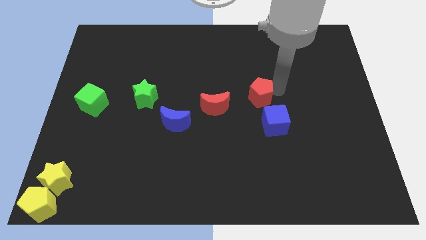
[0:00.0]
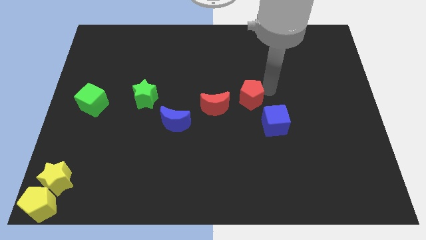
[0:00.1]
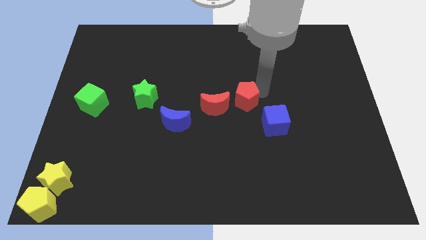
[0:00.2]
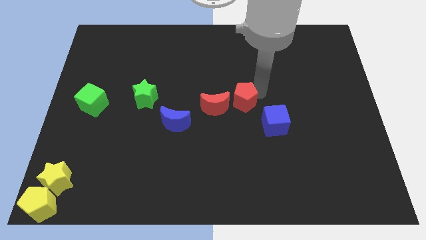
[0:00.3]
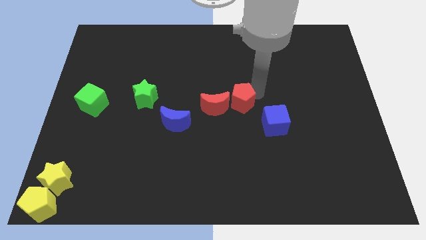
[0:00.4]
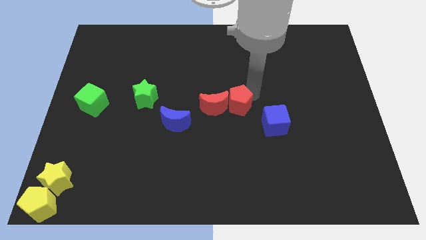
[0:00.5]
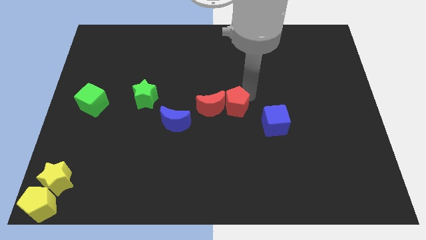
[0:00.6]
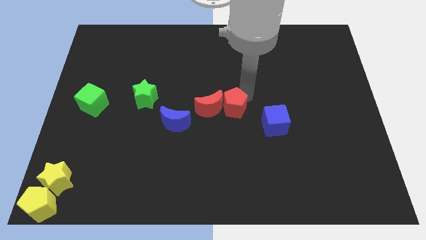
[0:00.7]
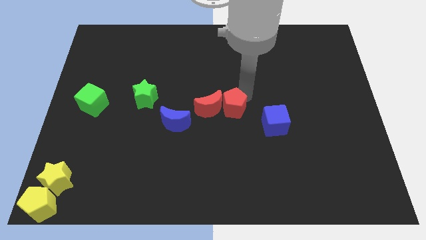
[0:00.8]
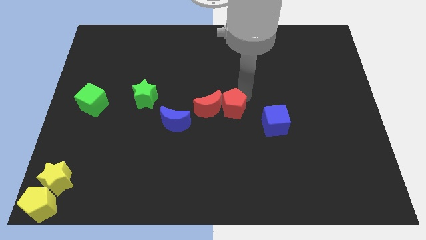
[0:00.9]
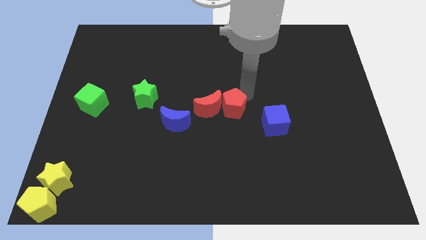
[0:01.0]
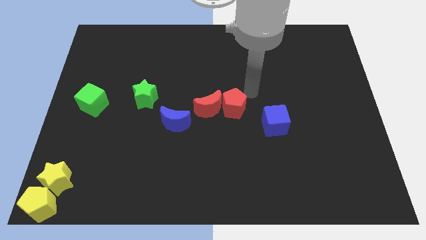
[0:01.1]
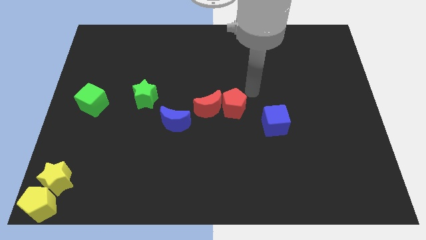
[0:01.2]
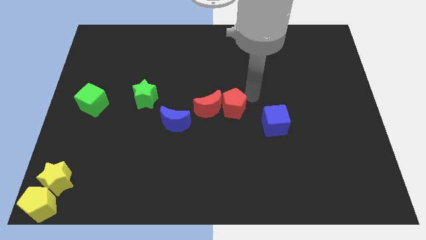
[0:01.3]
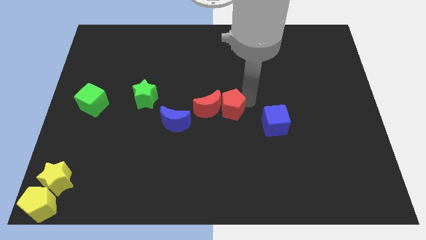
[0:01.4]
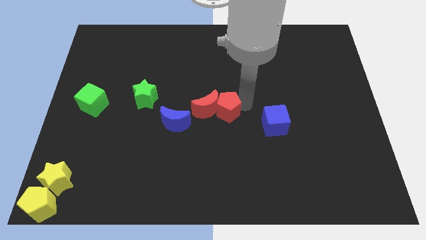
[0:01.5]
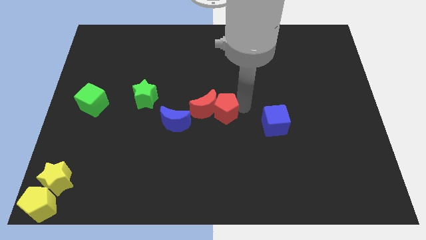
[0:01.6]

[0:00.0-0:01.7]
push the red pentagon into the red moon

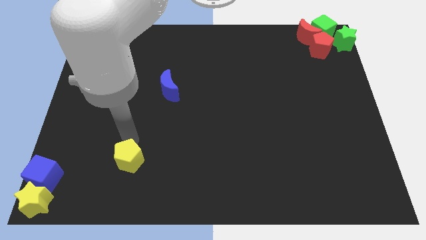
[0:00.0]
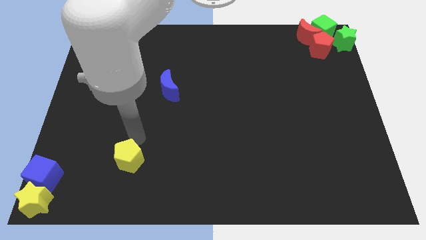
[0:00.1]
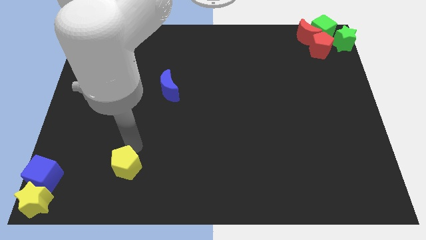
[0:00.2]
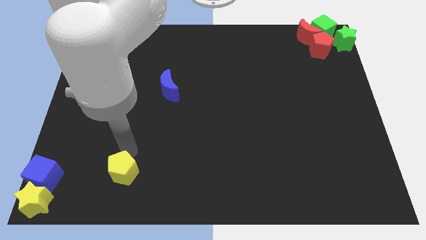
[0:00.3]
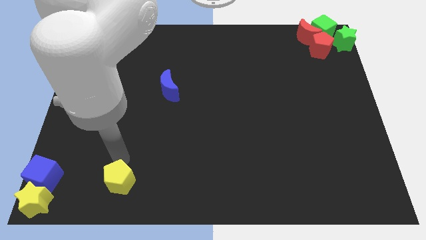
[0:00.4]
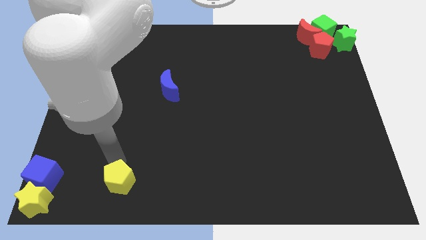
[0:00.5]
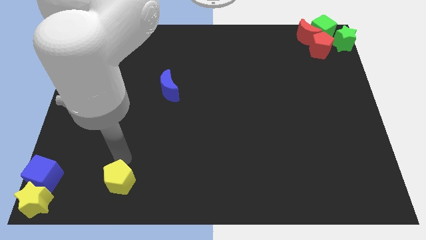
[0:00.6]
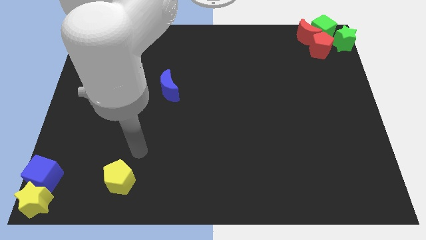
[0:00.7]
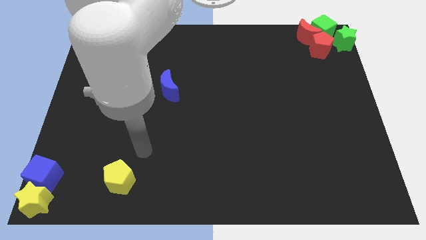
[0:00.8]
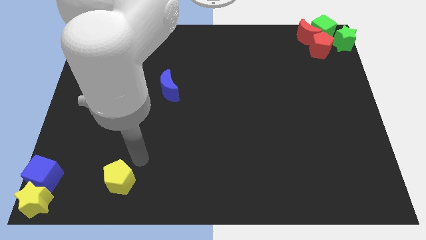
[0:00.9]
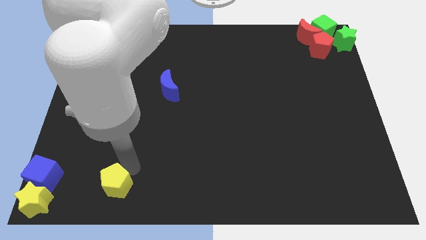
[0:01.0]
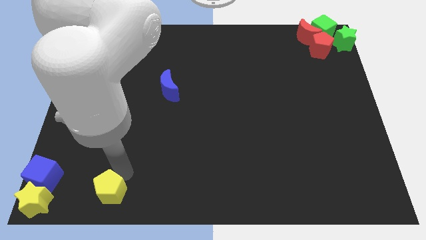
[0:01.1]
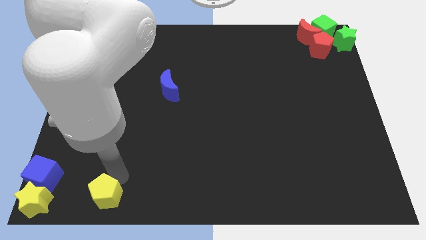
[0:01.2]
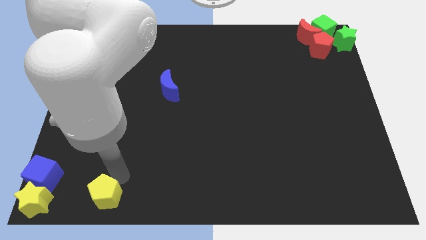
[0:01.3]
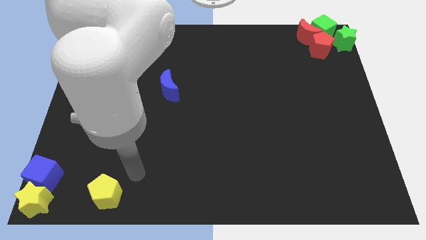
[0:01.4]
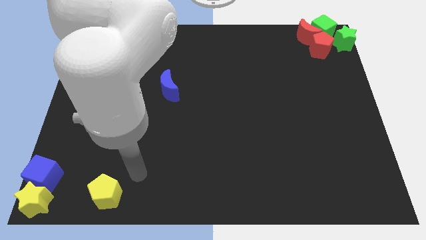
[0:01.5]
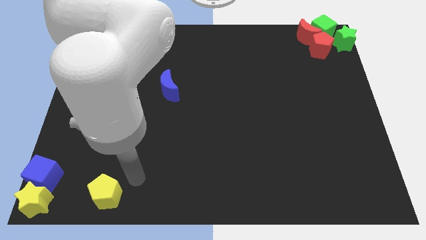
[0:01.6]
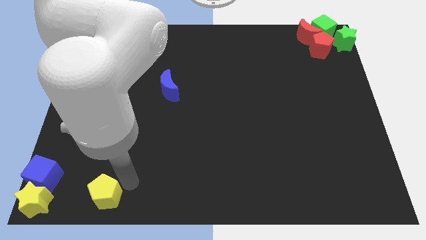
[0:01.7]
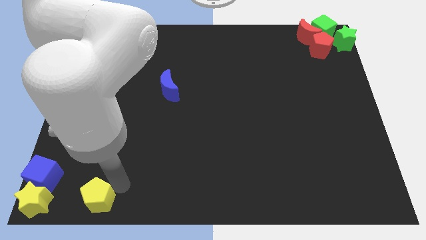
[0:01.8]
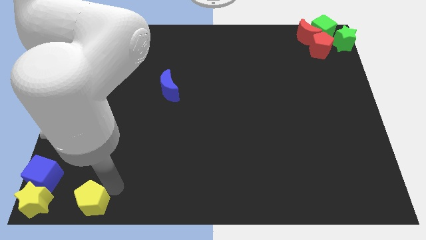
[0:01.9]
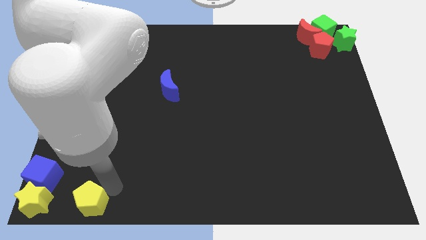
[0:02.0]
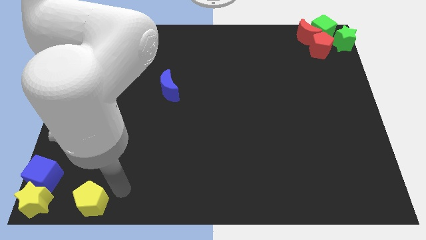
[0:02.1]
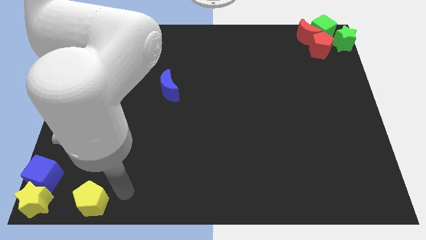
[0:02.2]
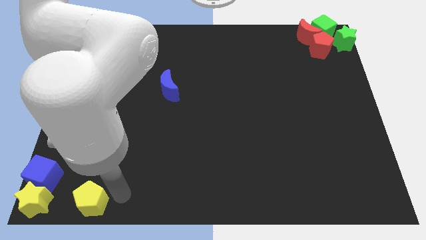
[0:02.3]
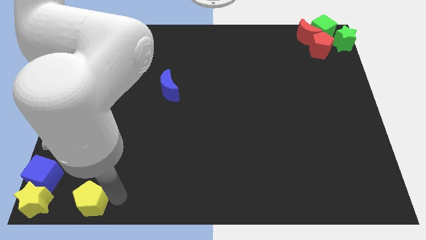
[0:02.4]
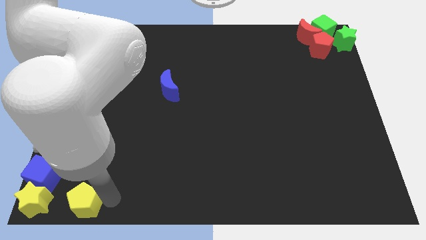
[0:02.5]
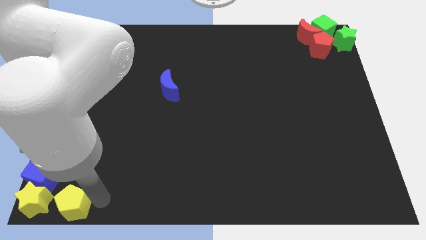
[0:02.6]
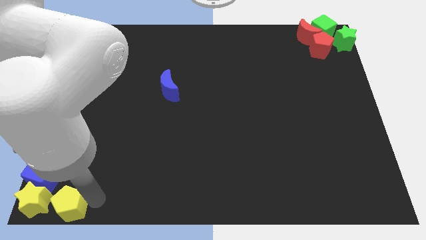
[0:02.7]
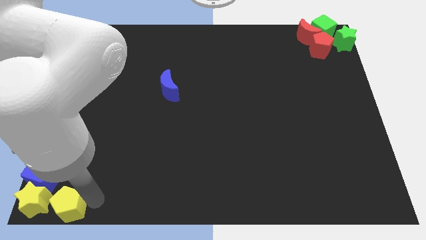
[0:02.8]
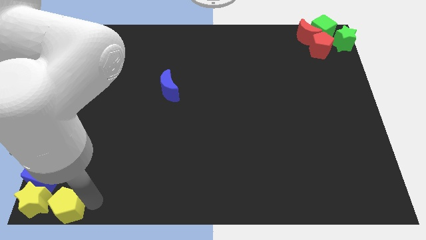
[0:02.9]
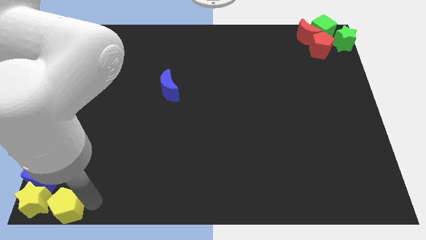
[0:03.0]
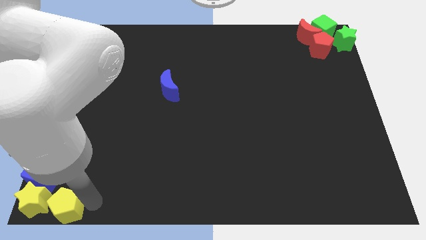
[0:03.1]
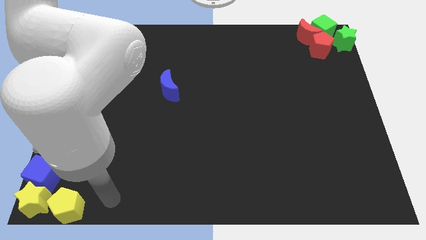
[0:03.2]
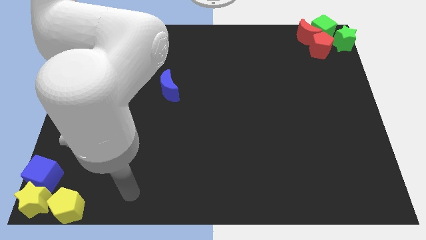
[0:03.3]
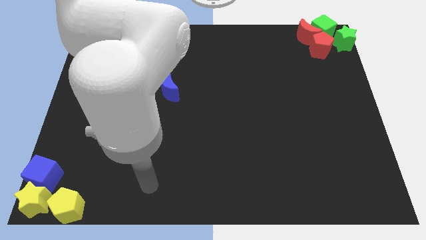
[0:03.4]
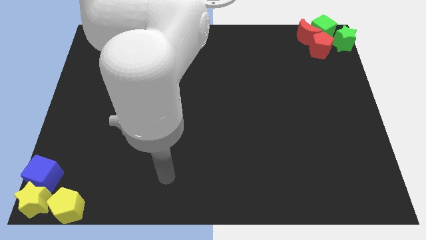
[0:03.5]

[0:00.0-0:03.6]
push the yellow pentagon right to the yellow star

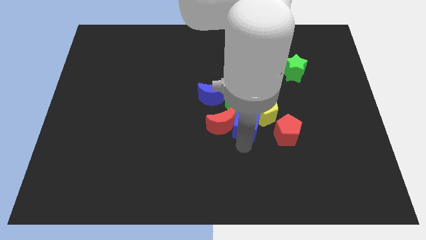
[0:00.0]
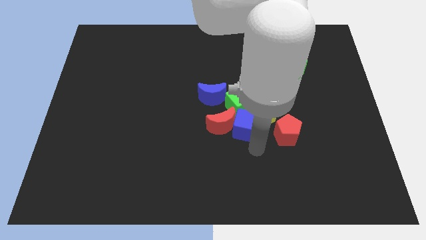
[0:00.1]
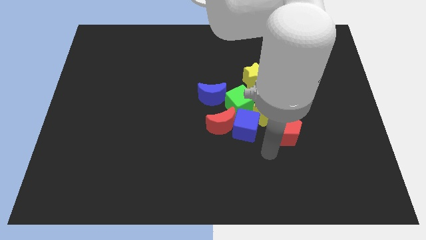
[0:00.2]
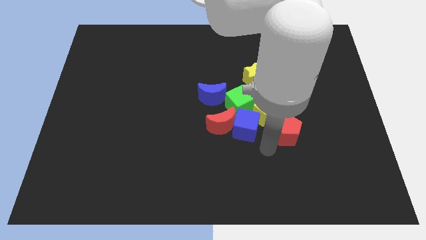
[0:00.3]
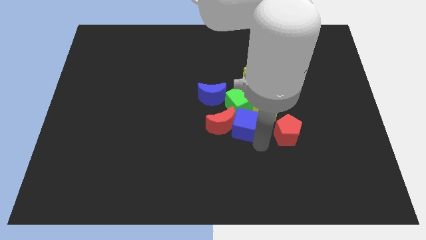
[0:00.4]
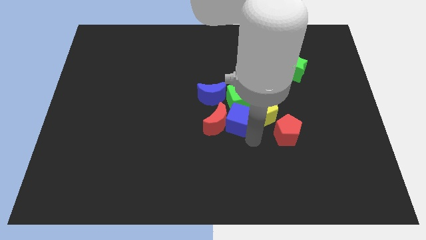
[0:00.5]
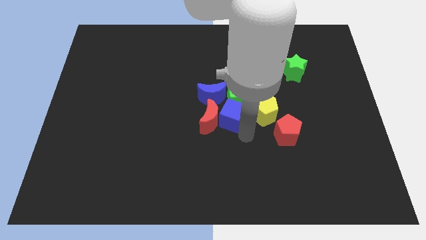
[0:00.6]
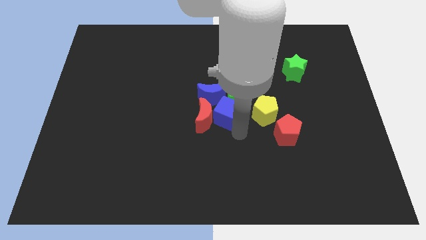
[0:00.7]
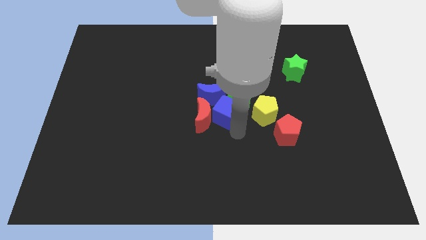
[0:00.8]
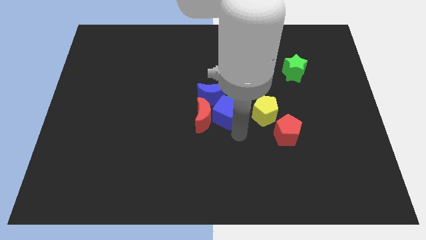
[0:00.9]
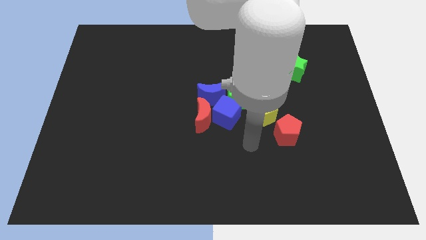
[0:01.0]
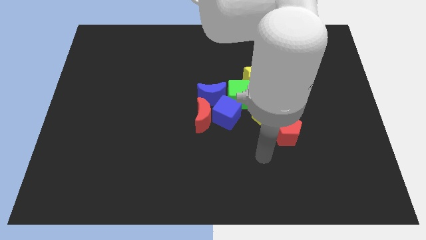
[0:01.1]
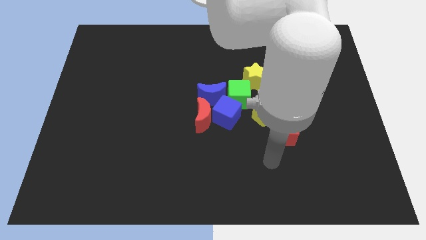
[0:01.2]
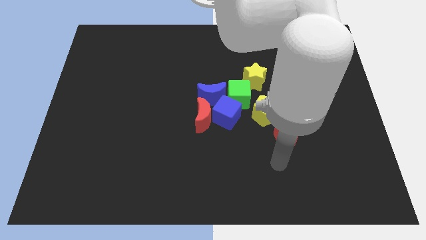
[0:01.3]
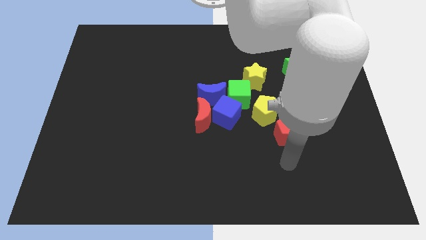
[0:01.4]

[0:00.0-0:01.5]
move the blue cube to the right of the red moon

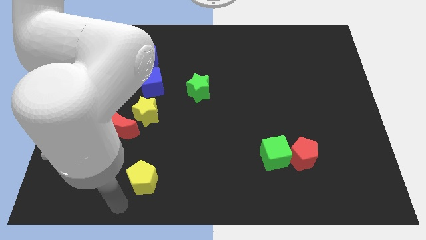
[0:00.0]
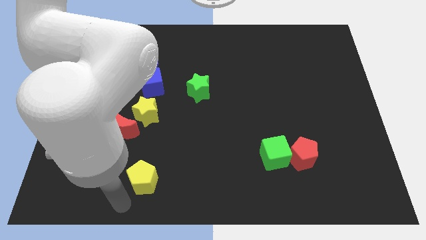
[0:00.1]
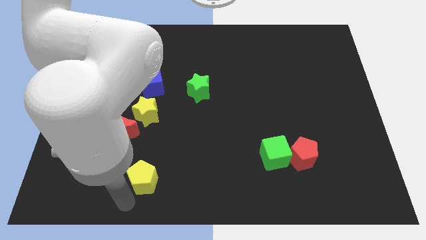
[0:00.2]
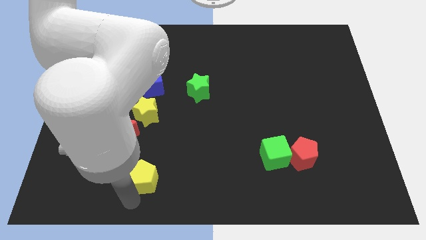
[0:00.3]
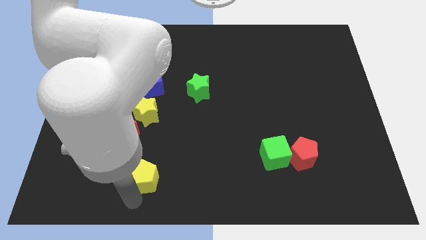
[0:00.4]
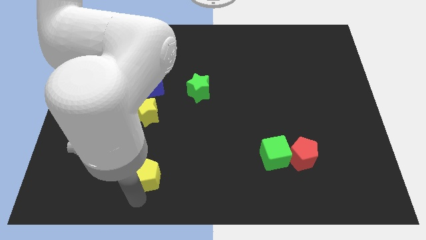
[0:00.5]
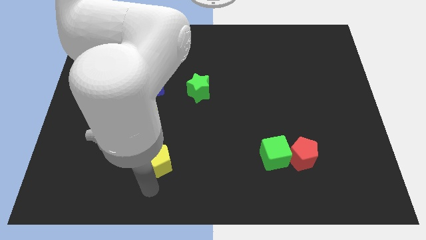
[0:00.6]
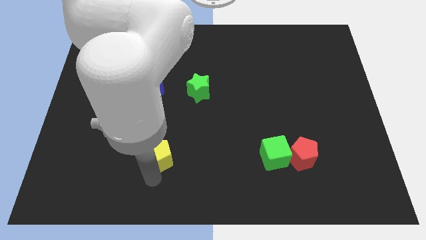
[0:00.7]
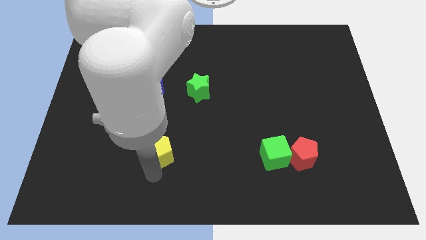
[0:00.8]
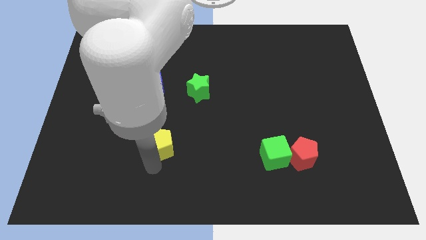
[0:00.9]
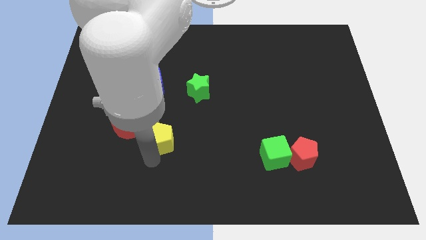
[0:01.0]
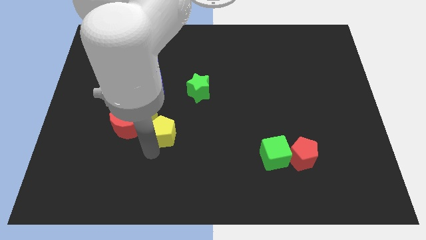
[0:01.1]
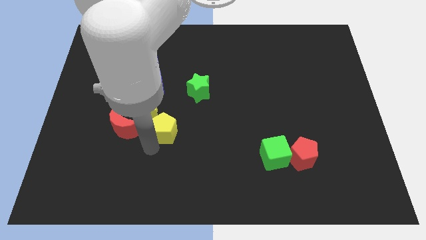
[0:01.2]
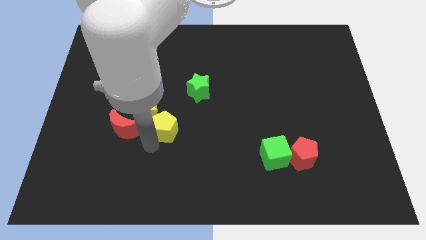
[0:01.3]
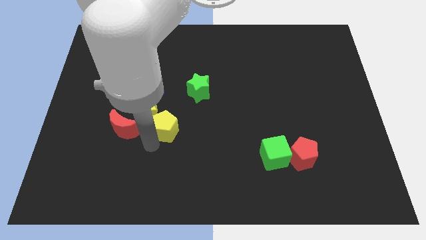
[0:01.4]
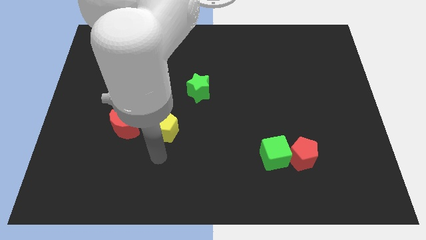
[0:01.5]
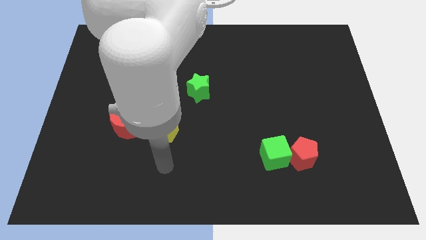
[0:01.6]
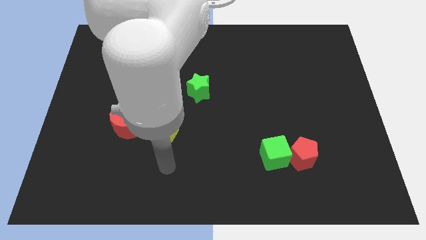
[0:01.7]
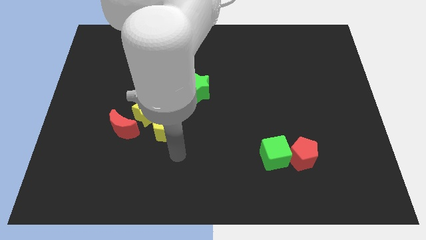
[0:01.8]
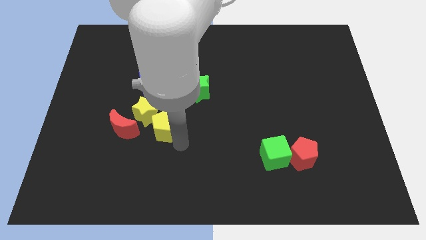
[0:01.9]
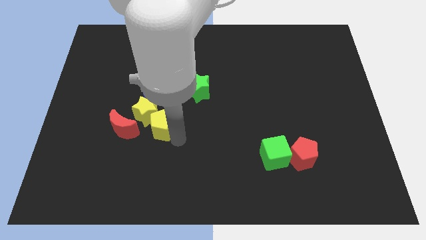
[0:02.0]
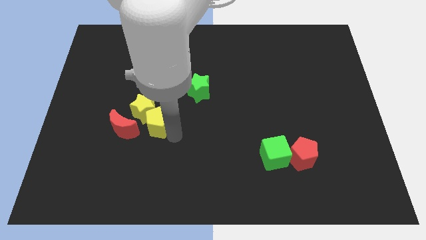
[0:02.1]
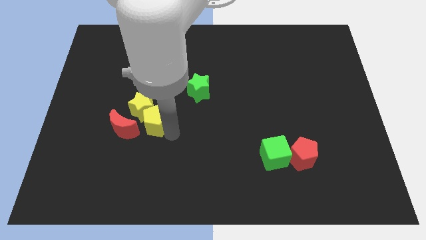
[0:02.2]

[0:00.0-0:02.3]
push the yellow pentagon into the yellow star
